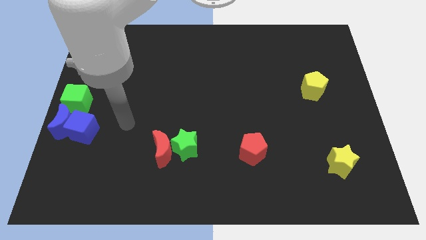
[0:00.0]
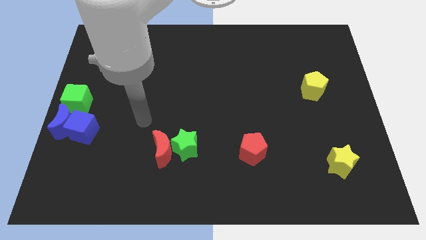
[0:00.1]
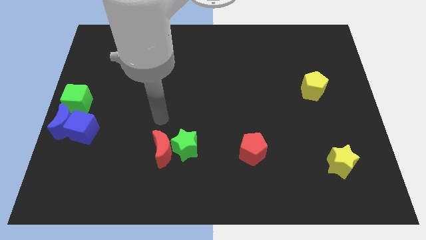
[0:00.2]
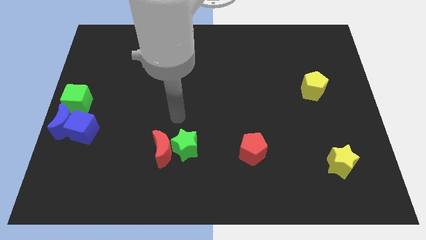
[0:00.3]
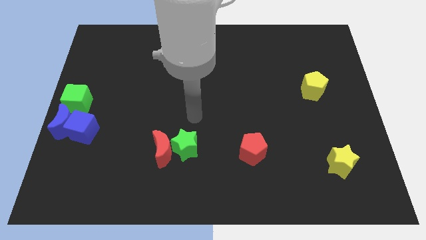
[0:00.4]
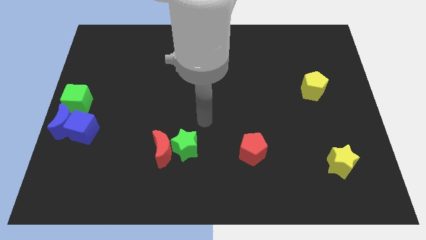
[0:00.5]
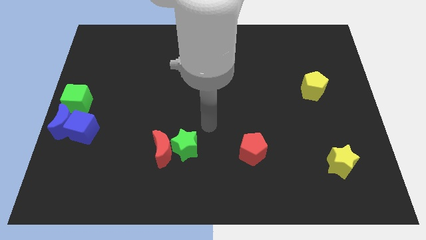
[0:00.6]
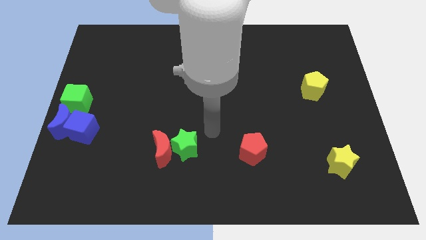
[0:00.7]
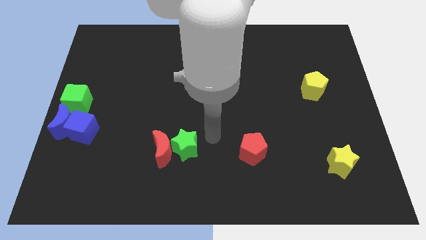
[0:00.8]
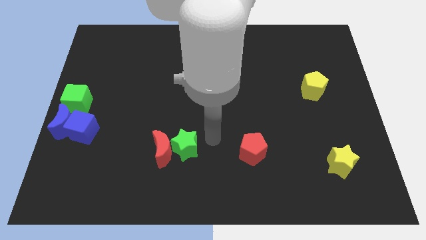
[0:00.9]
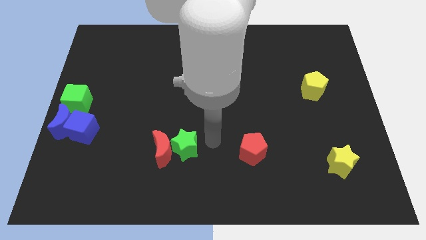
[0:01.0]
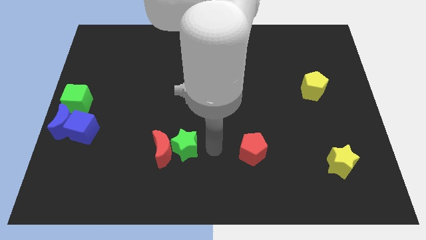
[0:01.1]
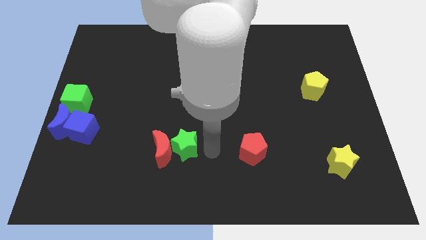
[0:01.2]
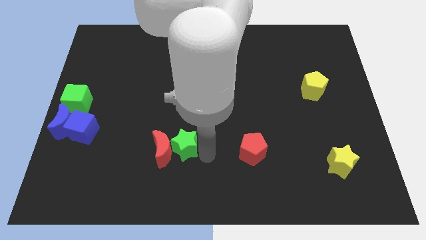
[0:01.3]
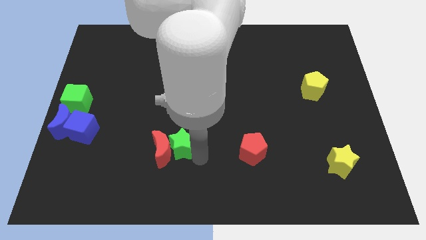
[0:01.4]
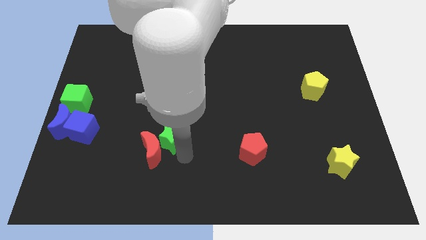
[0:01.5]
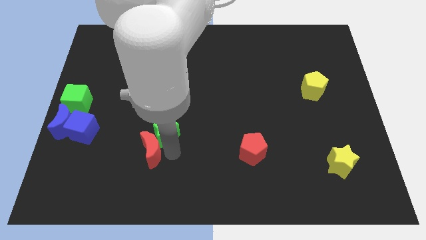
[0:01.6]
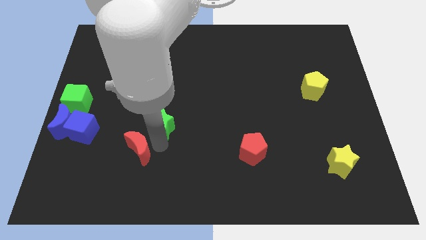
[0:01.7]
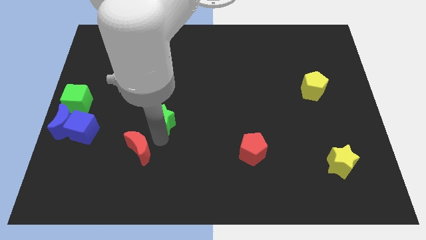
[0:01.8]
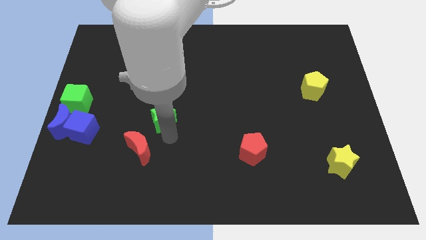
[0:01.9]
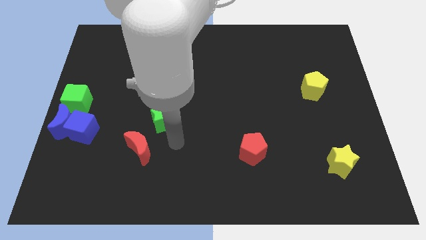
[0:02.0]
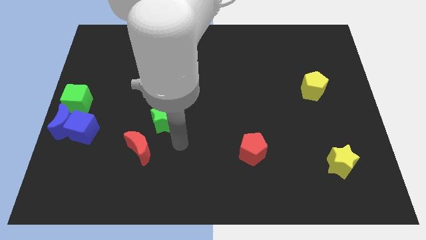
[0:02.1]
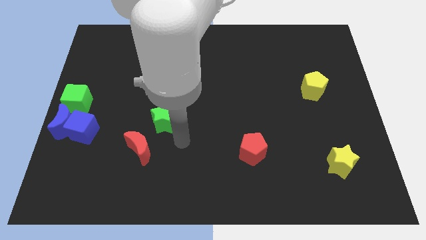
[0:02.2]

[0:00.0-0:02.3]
move the green star towards top

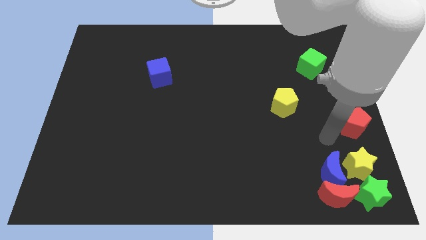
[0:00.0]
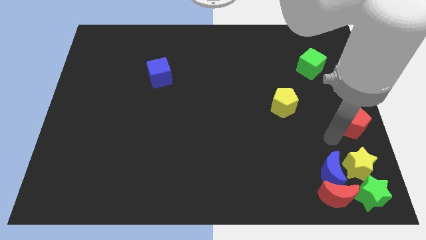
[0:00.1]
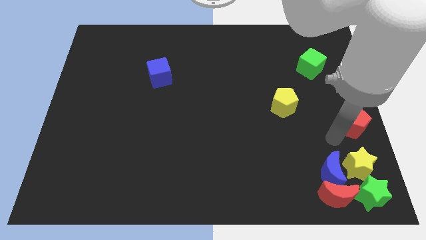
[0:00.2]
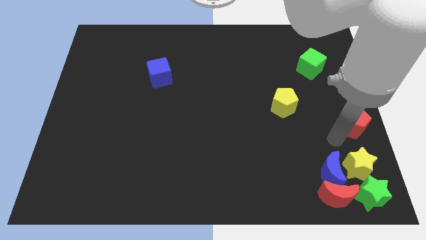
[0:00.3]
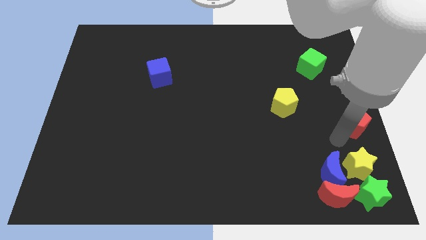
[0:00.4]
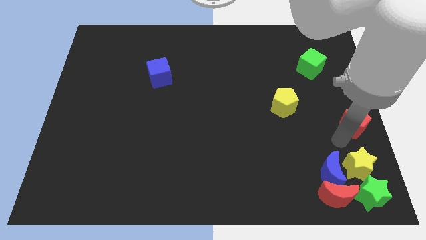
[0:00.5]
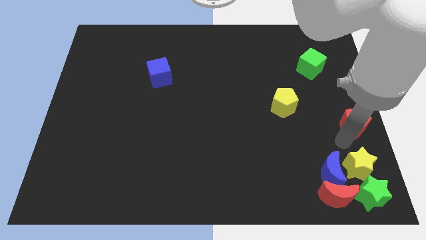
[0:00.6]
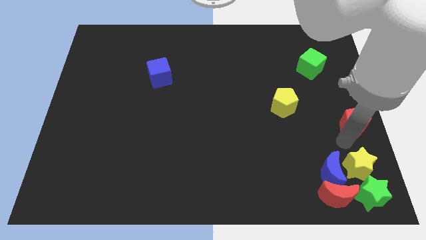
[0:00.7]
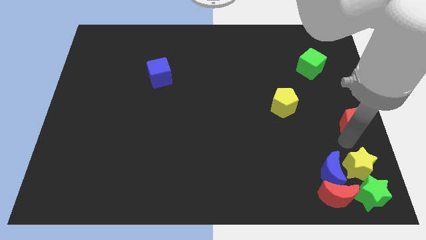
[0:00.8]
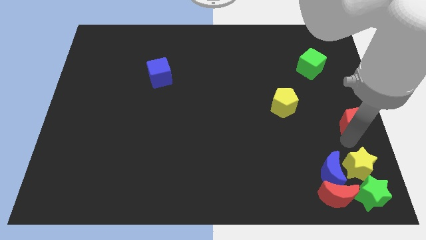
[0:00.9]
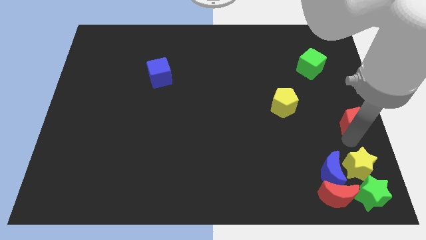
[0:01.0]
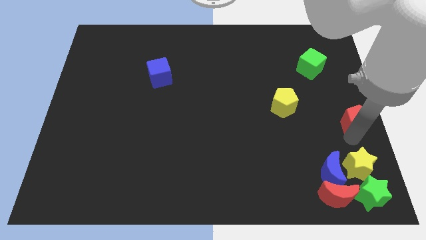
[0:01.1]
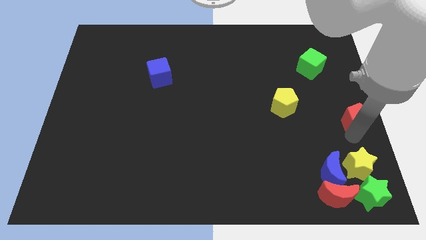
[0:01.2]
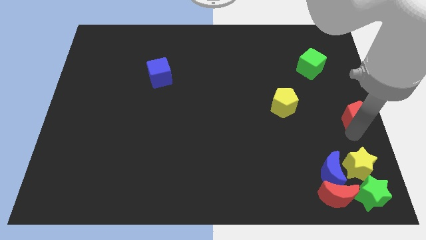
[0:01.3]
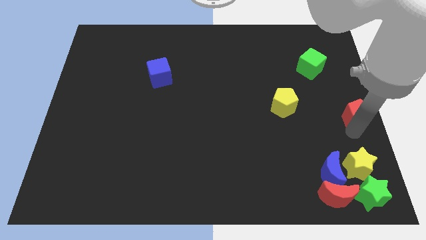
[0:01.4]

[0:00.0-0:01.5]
move red pentagon slightly to the top of the board

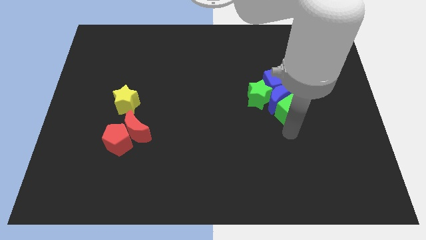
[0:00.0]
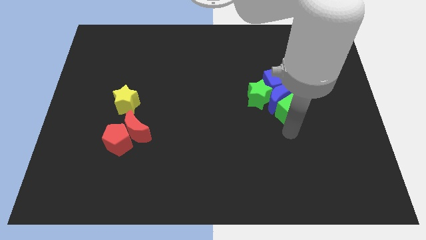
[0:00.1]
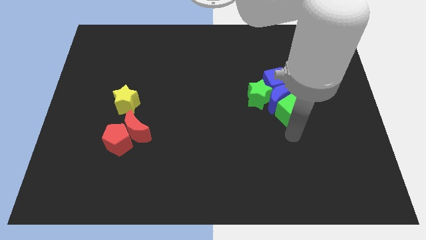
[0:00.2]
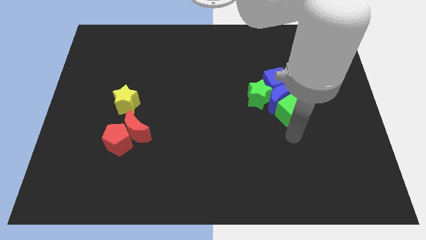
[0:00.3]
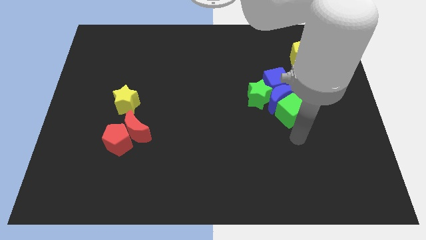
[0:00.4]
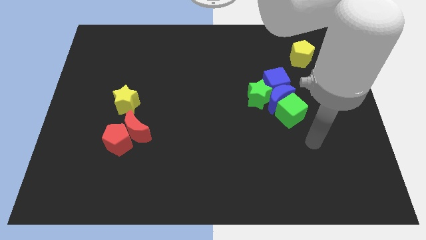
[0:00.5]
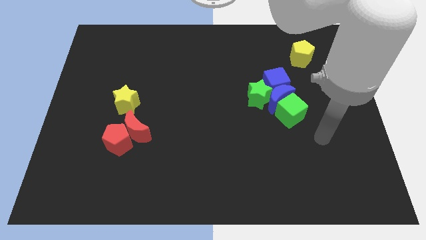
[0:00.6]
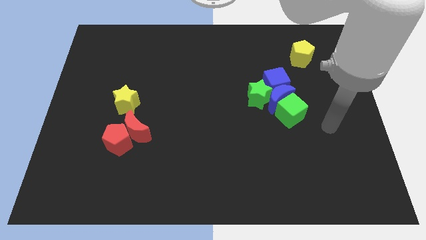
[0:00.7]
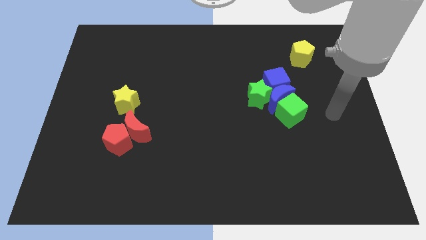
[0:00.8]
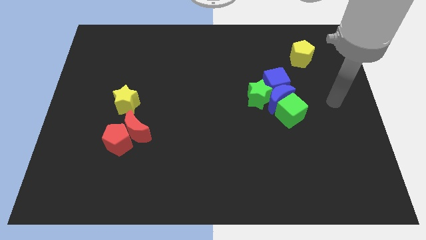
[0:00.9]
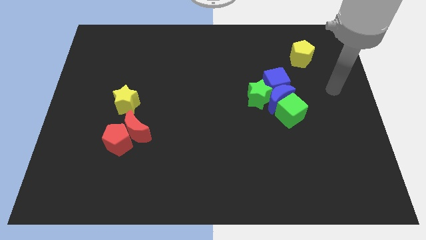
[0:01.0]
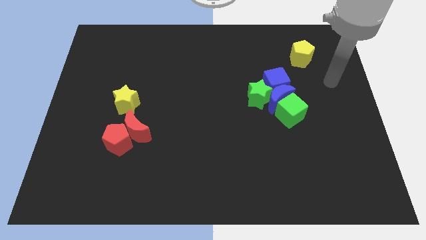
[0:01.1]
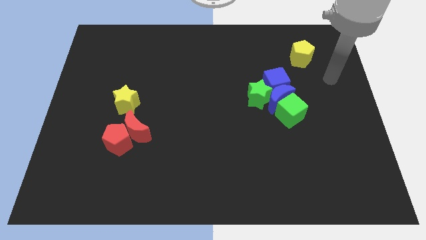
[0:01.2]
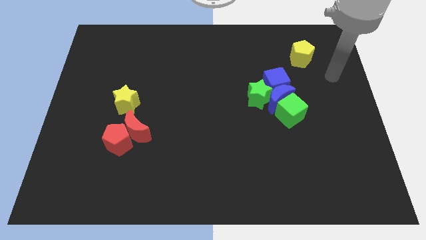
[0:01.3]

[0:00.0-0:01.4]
drag the pointer away from the green cube

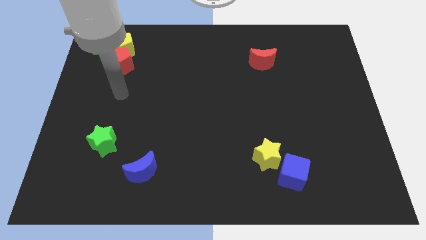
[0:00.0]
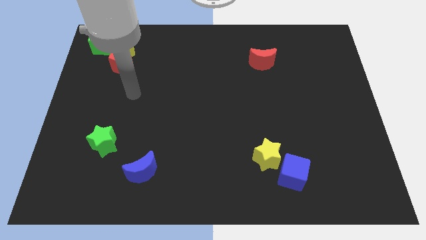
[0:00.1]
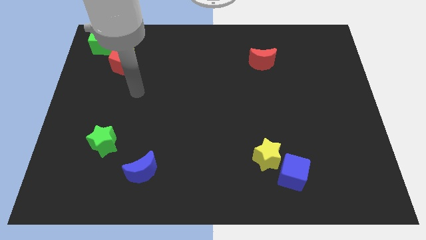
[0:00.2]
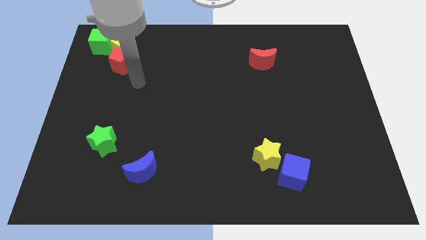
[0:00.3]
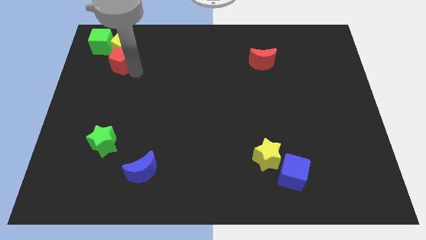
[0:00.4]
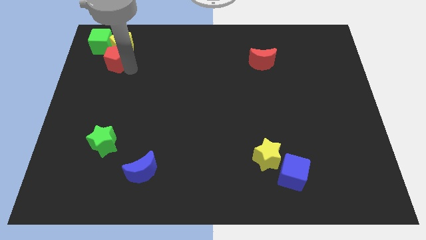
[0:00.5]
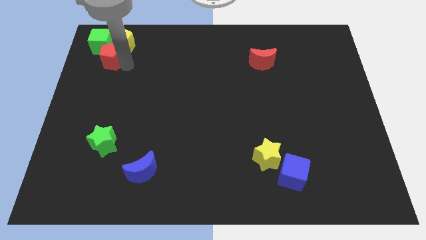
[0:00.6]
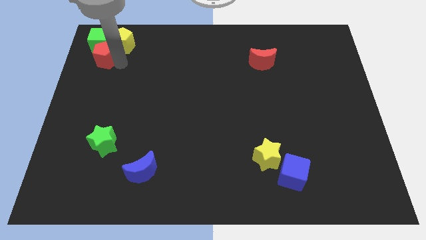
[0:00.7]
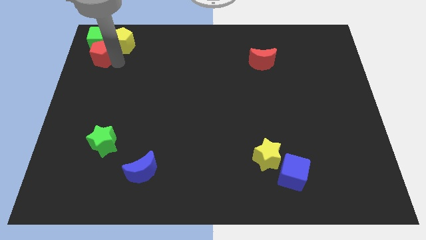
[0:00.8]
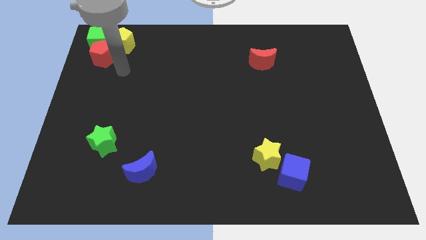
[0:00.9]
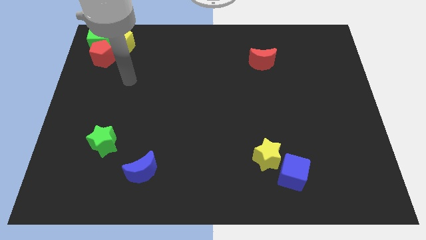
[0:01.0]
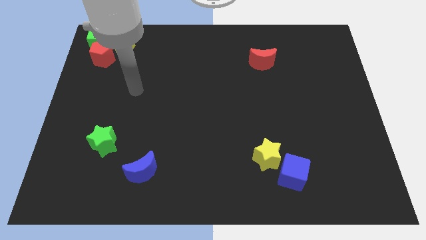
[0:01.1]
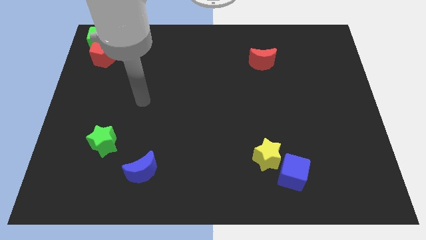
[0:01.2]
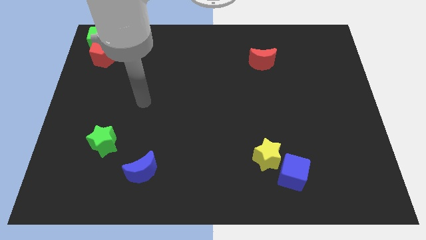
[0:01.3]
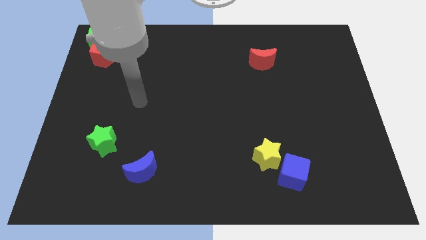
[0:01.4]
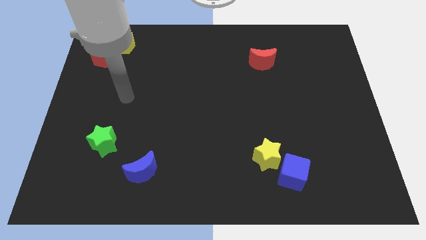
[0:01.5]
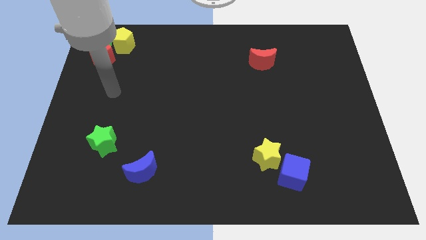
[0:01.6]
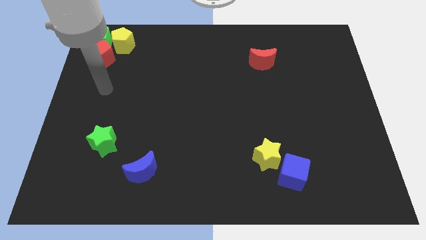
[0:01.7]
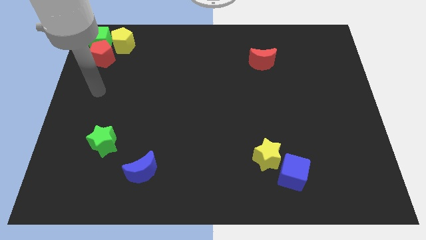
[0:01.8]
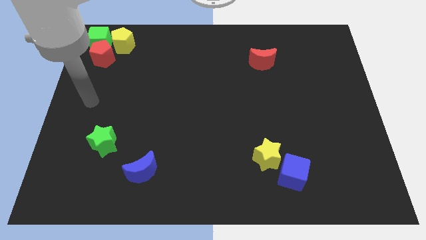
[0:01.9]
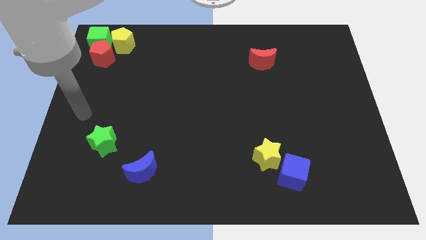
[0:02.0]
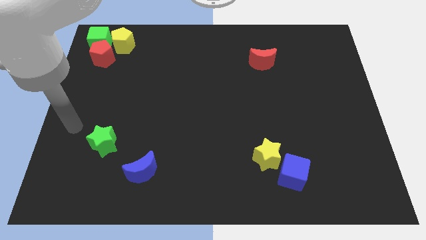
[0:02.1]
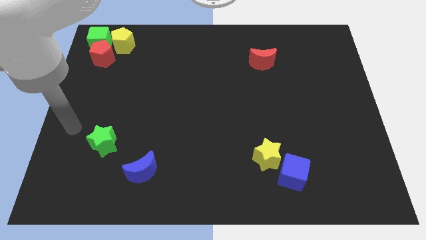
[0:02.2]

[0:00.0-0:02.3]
move the groups of the blocks to the top left corner of the board

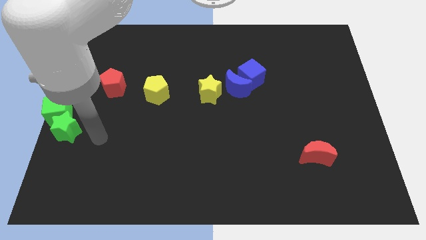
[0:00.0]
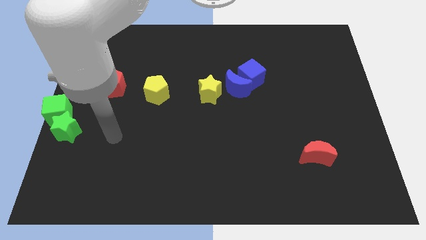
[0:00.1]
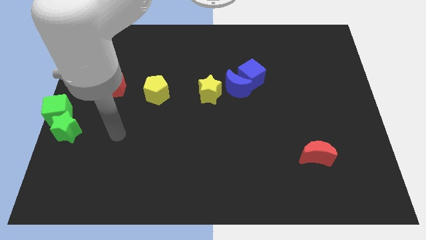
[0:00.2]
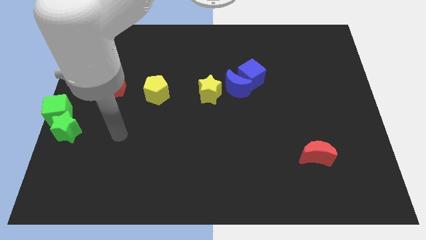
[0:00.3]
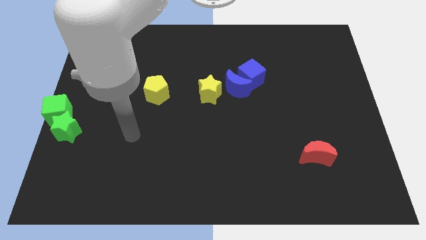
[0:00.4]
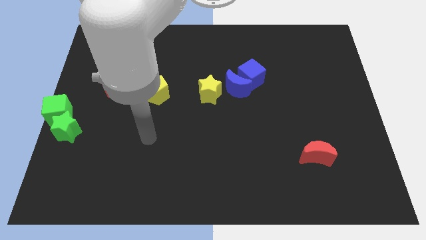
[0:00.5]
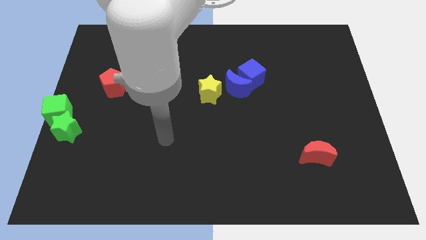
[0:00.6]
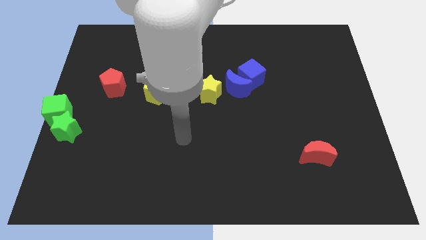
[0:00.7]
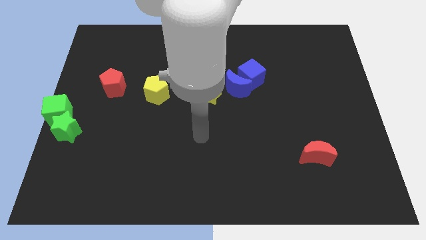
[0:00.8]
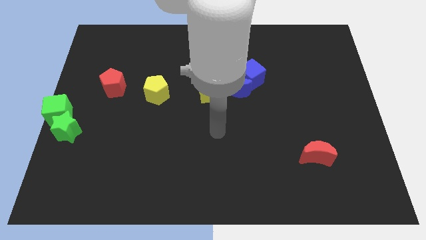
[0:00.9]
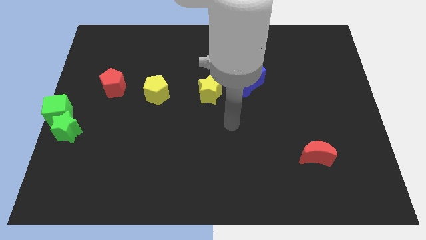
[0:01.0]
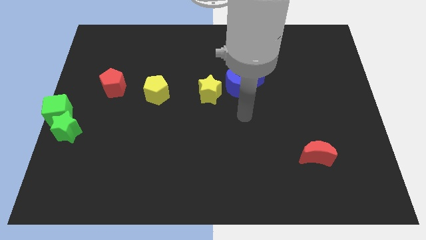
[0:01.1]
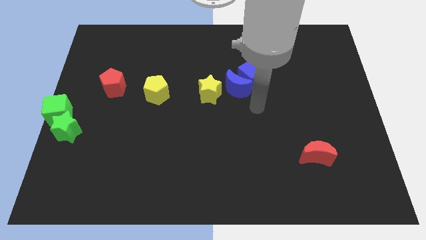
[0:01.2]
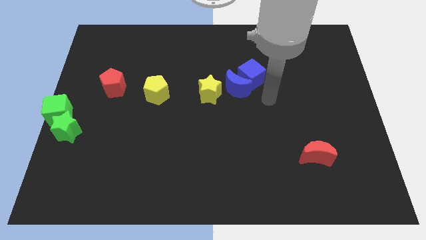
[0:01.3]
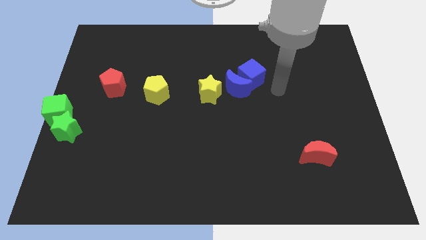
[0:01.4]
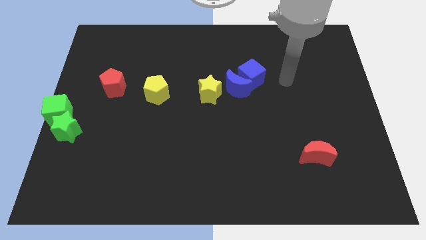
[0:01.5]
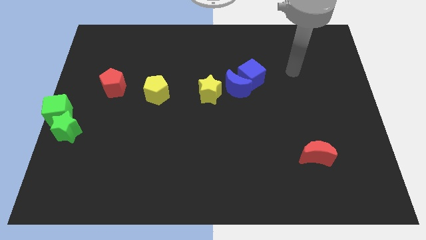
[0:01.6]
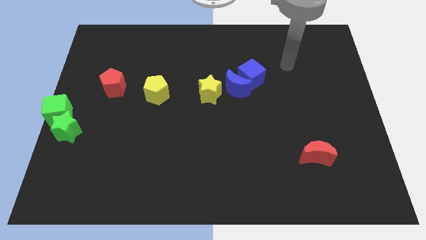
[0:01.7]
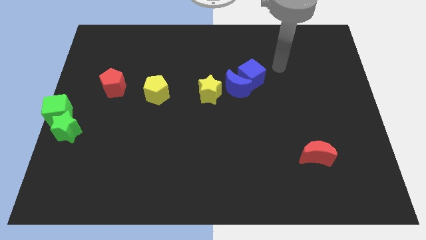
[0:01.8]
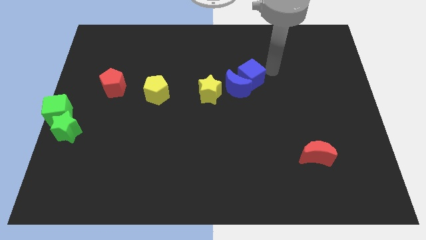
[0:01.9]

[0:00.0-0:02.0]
move your arm and point diagonal right of blue cube
